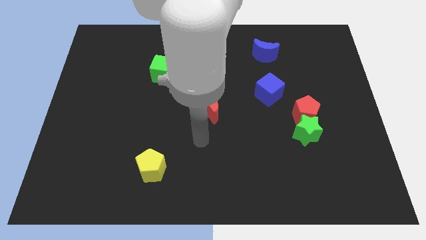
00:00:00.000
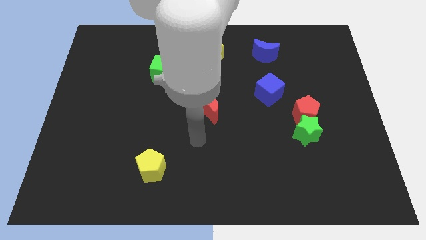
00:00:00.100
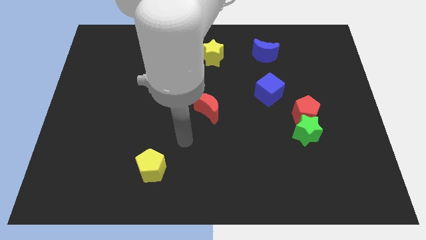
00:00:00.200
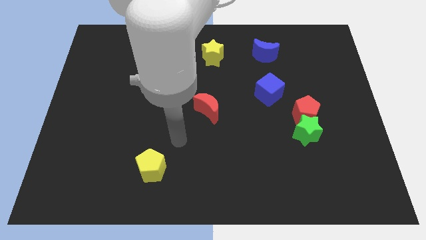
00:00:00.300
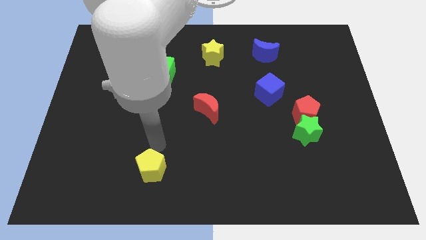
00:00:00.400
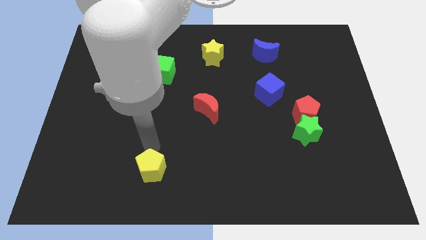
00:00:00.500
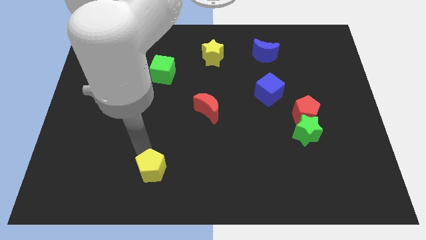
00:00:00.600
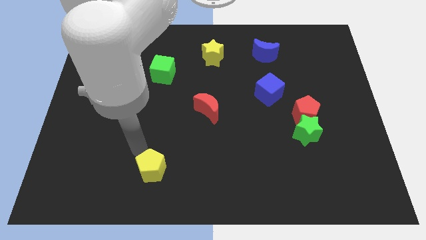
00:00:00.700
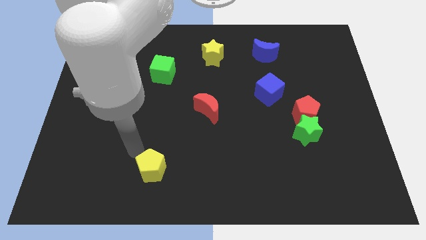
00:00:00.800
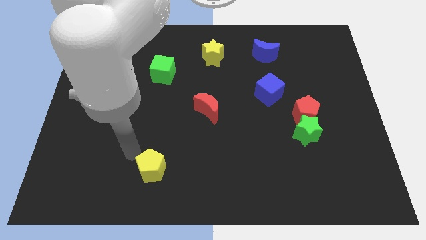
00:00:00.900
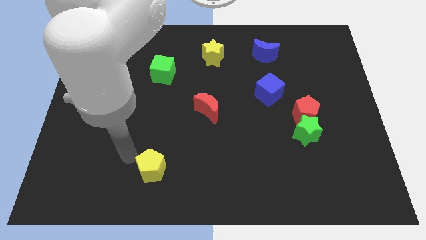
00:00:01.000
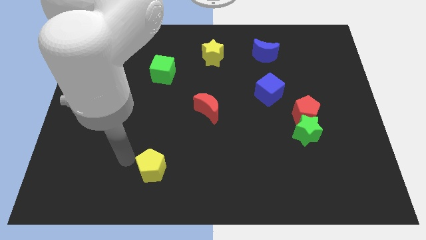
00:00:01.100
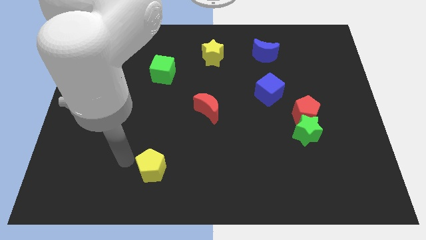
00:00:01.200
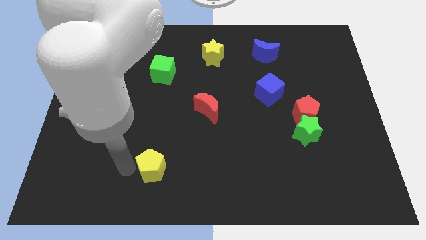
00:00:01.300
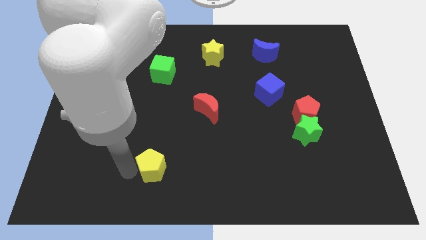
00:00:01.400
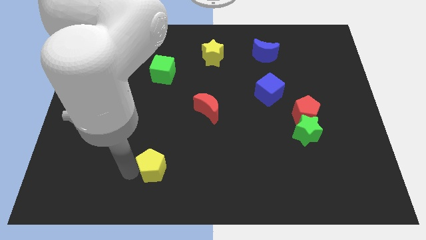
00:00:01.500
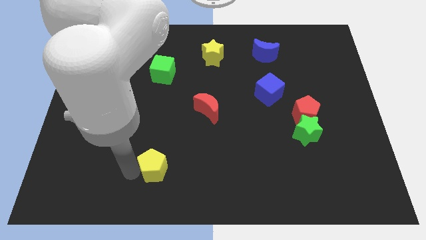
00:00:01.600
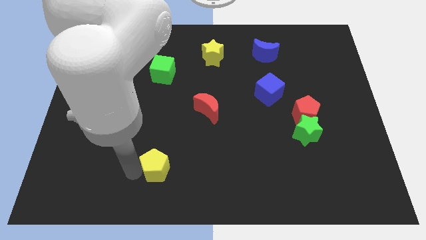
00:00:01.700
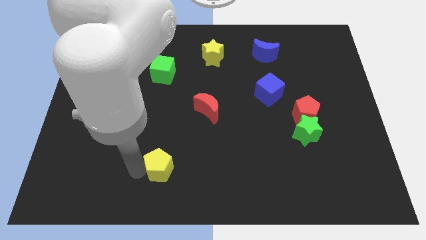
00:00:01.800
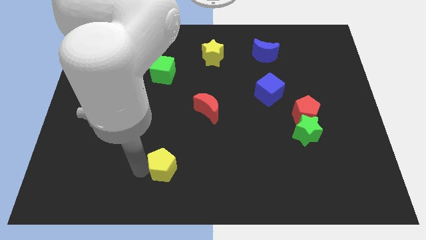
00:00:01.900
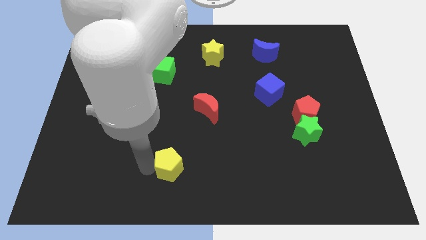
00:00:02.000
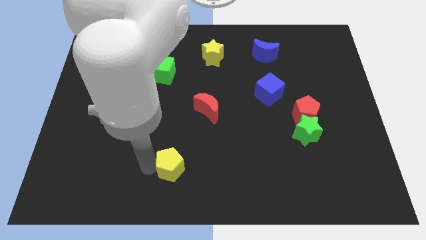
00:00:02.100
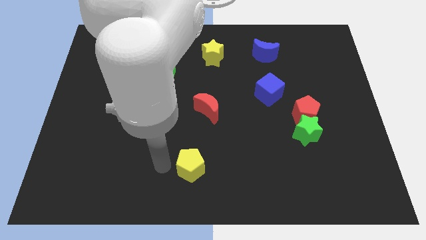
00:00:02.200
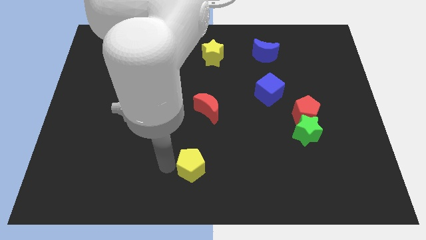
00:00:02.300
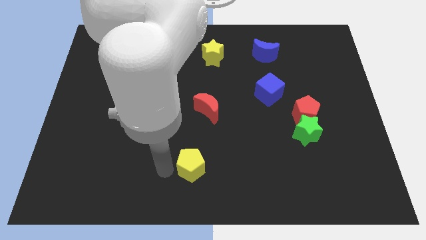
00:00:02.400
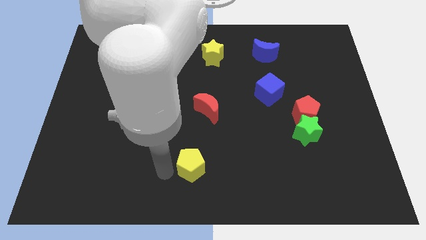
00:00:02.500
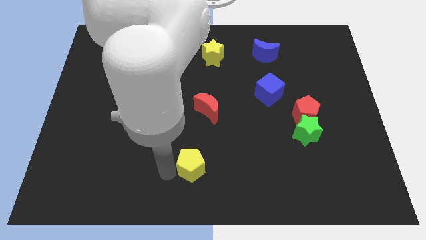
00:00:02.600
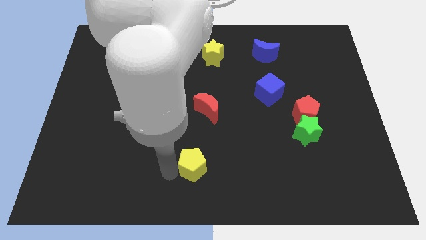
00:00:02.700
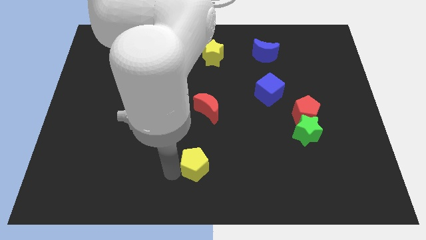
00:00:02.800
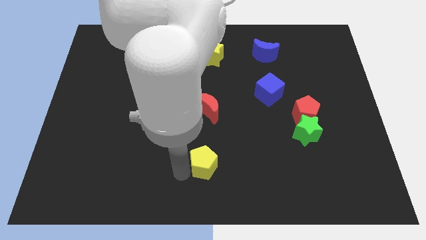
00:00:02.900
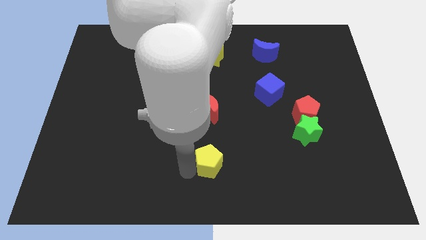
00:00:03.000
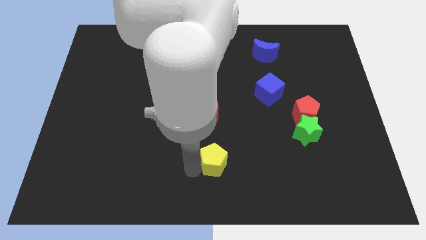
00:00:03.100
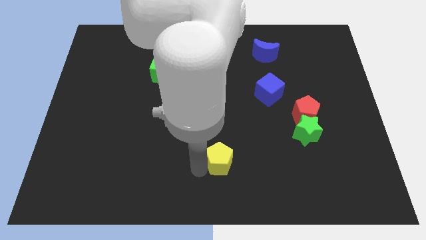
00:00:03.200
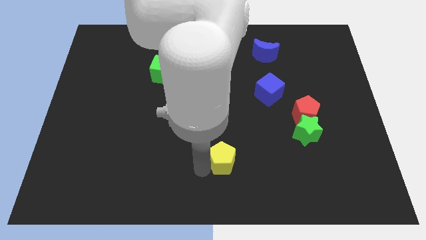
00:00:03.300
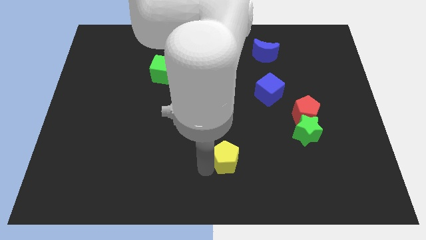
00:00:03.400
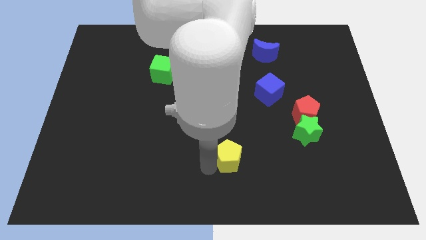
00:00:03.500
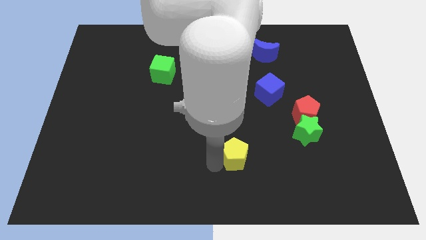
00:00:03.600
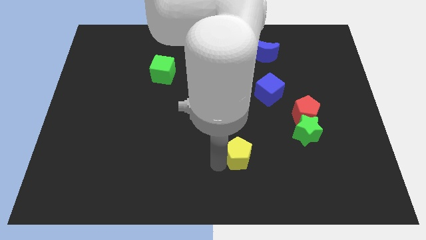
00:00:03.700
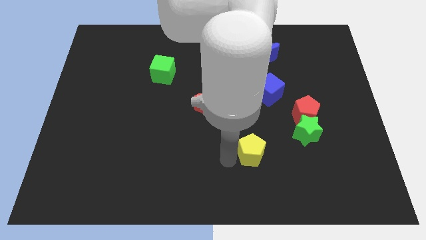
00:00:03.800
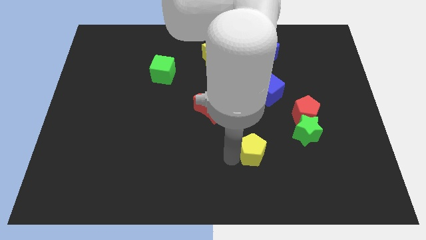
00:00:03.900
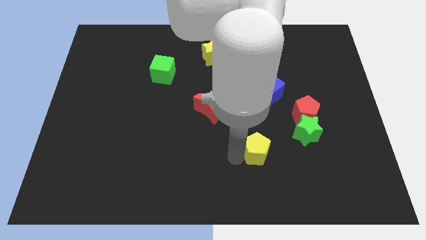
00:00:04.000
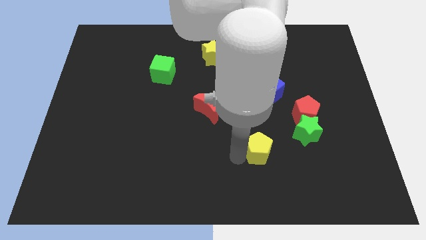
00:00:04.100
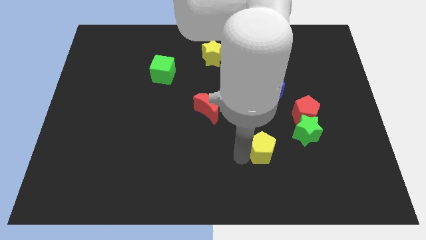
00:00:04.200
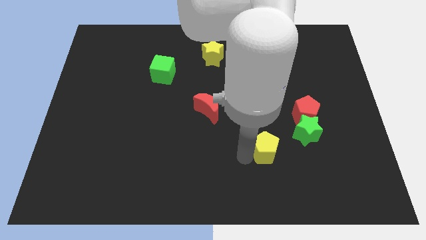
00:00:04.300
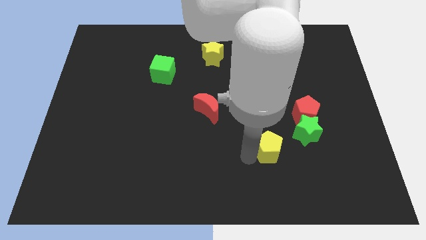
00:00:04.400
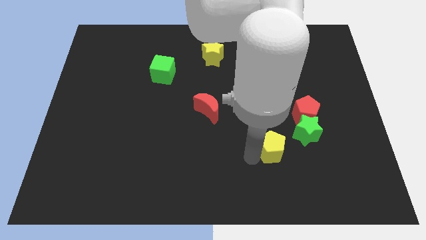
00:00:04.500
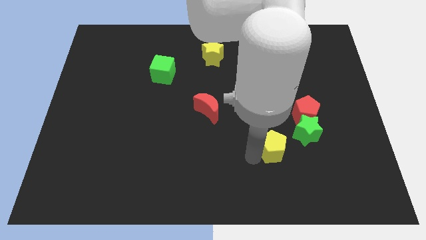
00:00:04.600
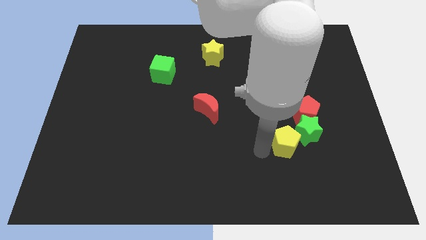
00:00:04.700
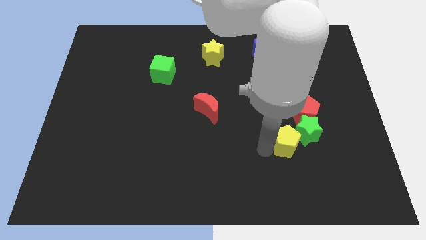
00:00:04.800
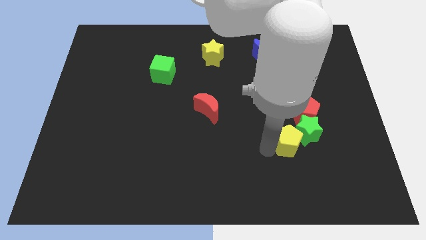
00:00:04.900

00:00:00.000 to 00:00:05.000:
slide the yellow pentagon close to the green star

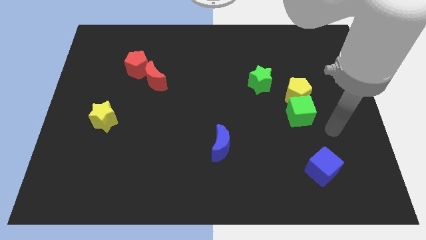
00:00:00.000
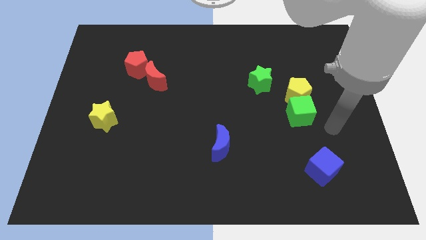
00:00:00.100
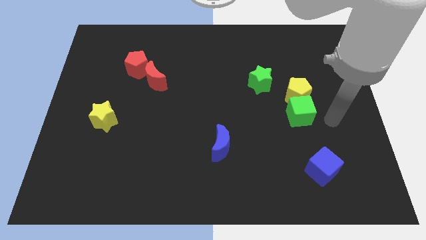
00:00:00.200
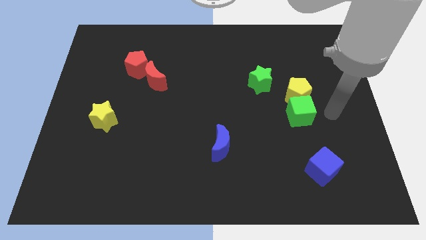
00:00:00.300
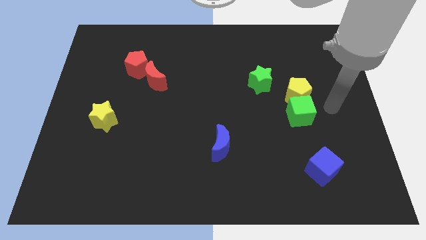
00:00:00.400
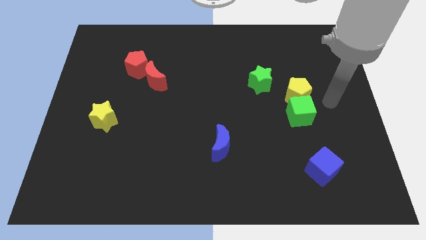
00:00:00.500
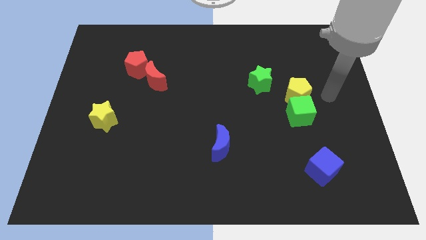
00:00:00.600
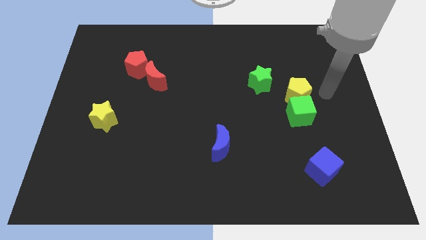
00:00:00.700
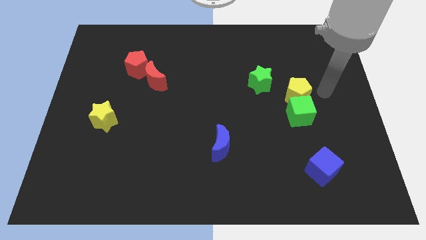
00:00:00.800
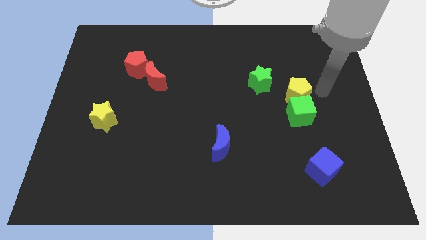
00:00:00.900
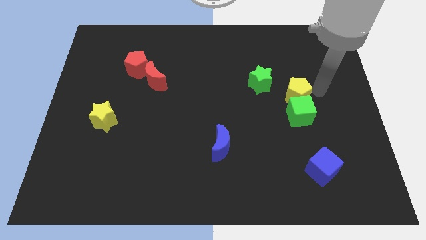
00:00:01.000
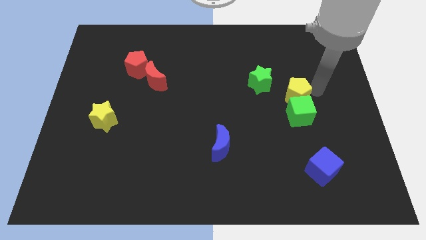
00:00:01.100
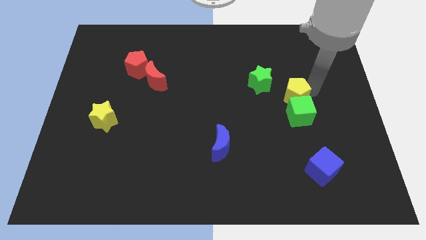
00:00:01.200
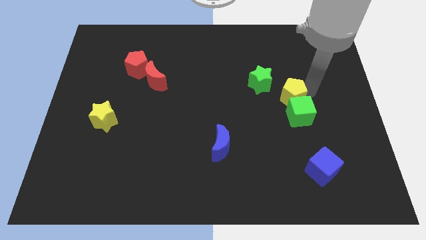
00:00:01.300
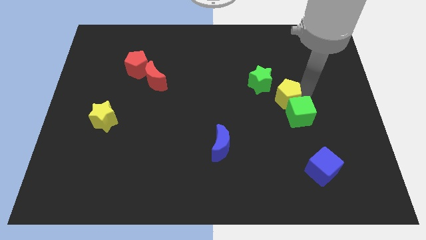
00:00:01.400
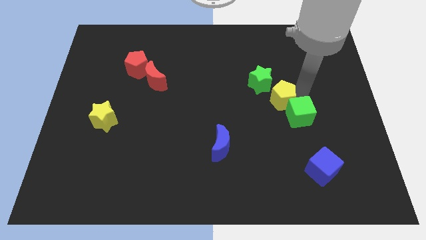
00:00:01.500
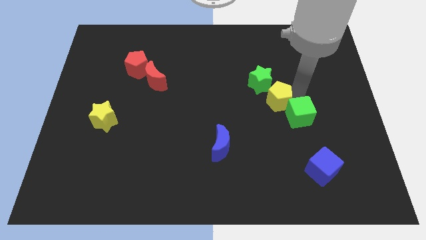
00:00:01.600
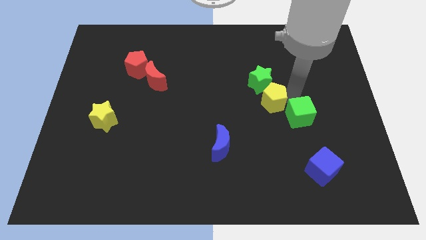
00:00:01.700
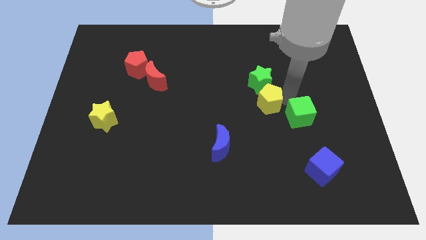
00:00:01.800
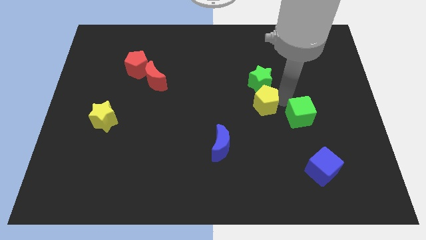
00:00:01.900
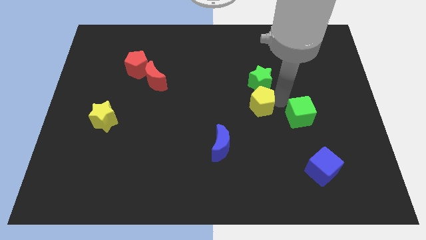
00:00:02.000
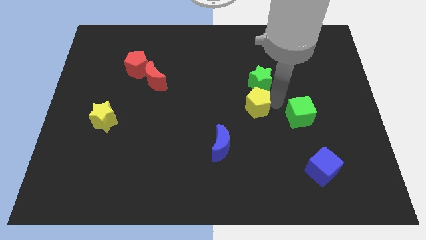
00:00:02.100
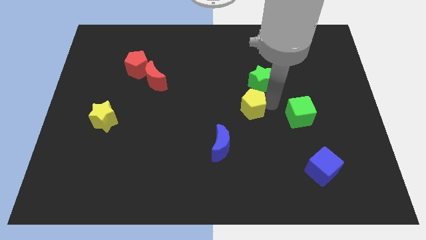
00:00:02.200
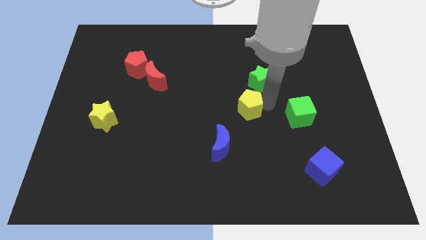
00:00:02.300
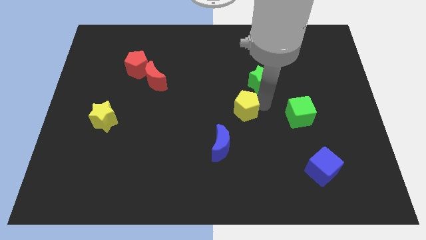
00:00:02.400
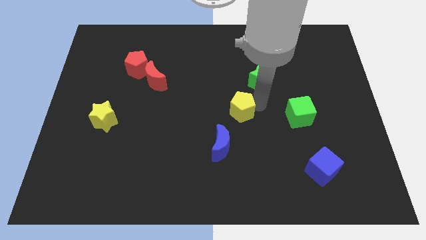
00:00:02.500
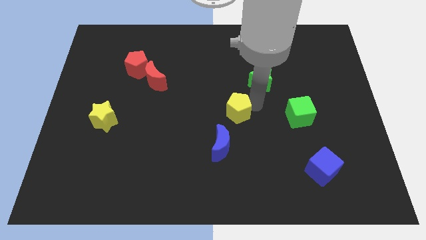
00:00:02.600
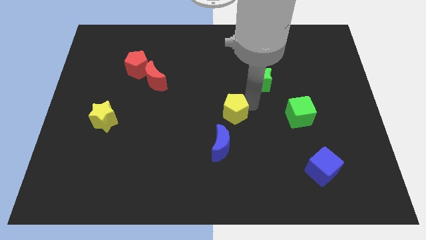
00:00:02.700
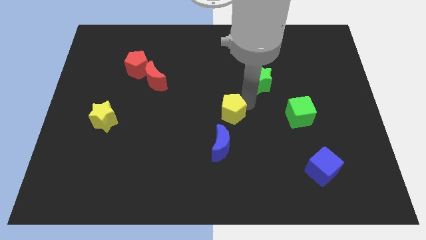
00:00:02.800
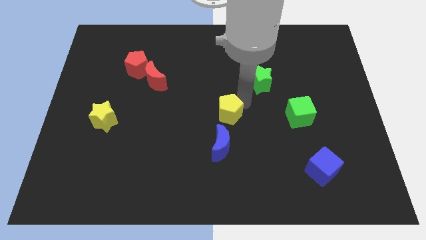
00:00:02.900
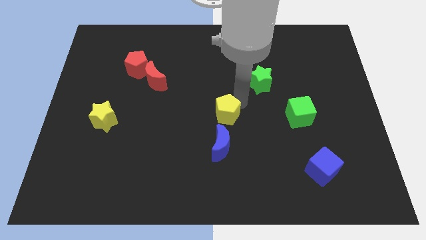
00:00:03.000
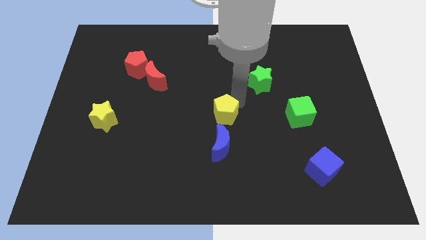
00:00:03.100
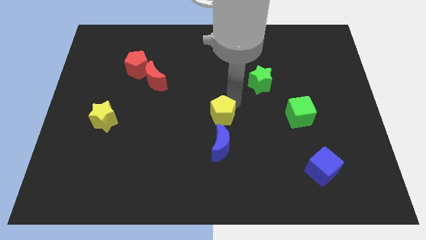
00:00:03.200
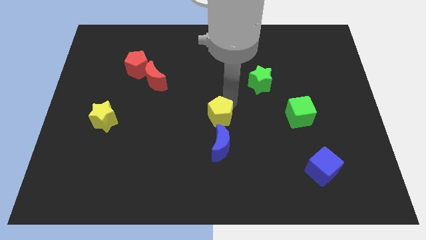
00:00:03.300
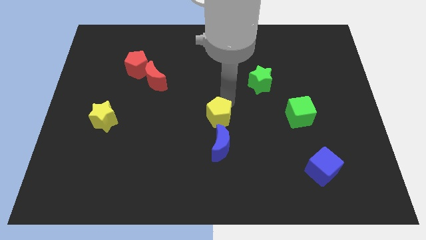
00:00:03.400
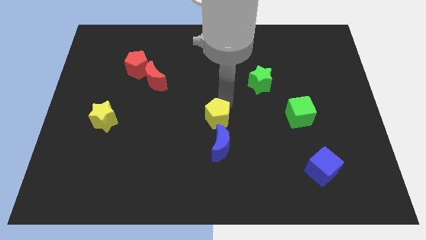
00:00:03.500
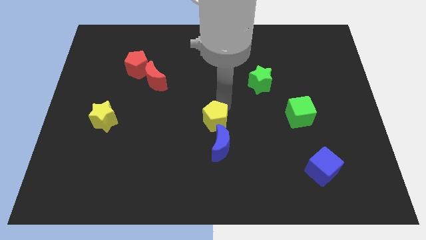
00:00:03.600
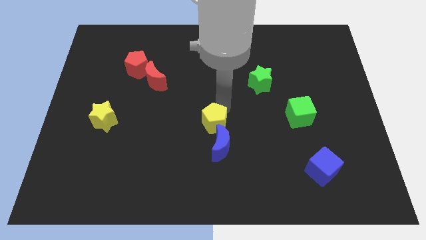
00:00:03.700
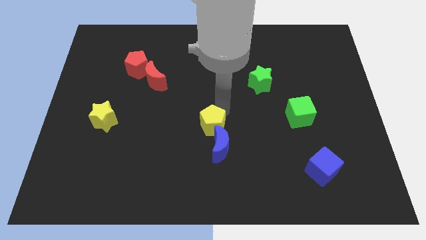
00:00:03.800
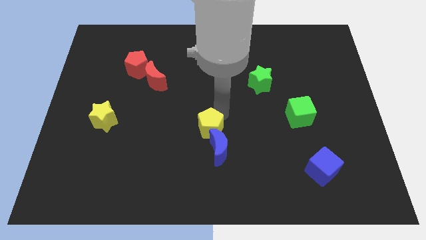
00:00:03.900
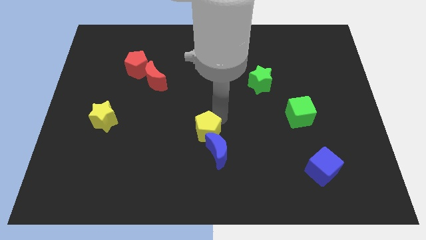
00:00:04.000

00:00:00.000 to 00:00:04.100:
move the yellow pentagon next to the blue moon
